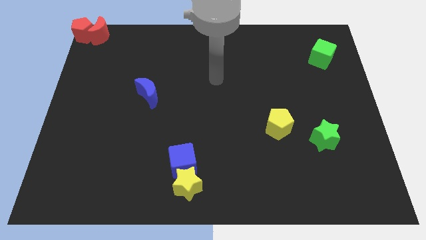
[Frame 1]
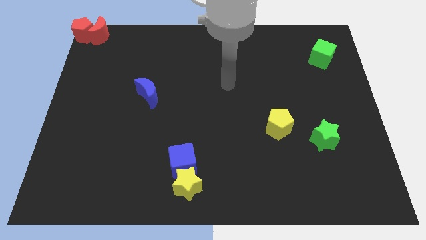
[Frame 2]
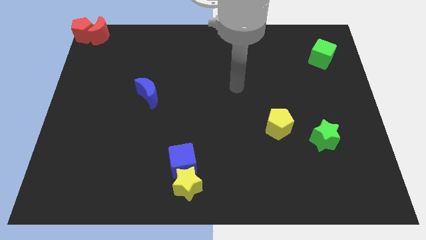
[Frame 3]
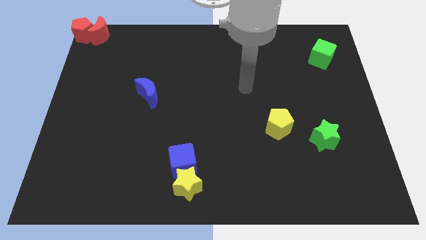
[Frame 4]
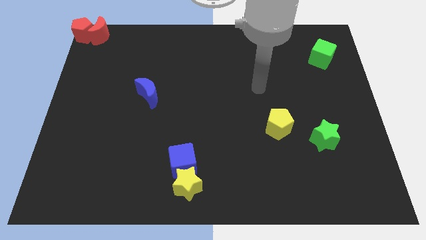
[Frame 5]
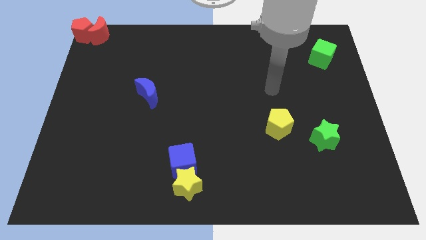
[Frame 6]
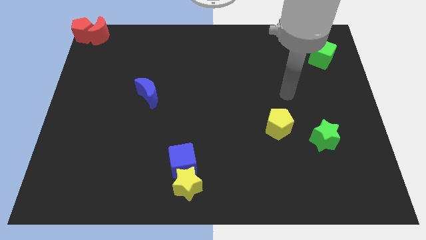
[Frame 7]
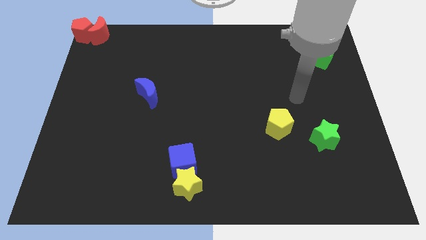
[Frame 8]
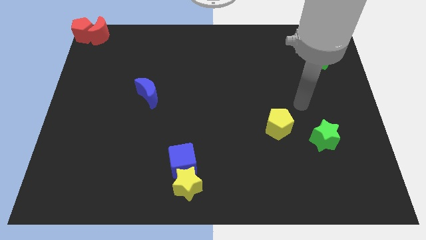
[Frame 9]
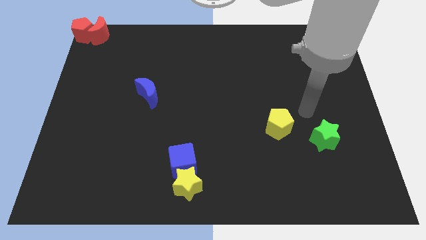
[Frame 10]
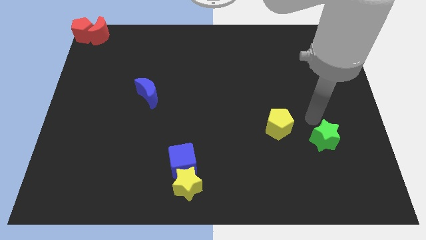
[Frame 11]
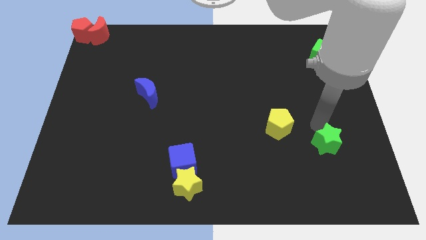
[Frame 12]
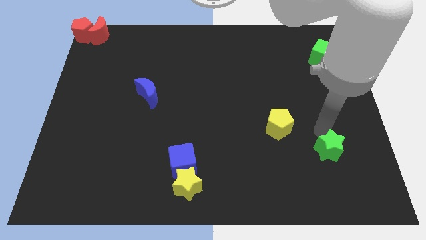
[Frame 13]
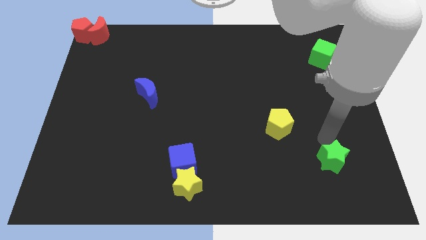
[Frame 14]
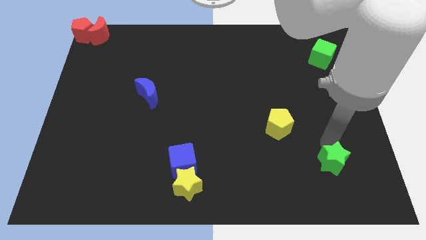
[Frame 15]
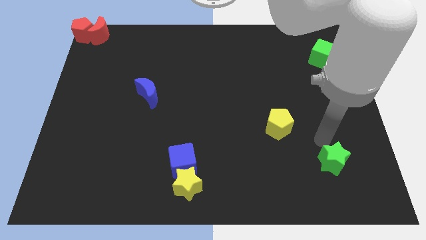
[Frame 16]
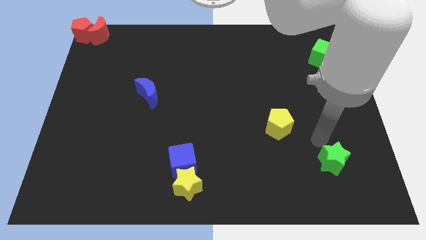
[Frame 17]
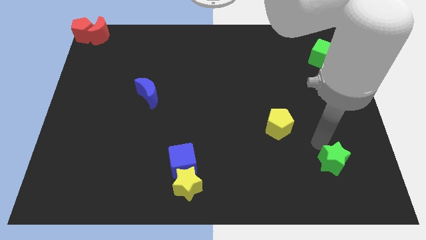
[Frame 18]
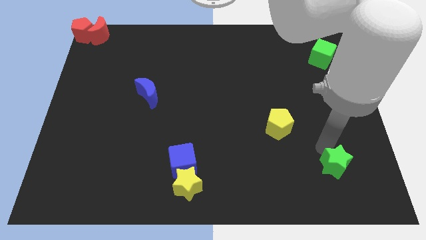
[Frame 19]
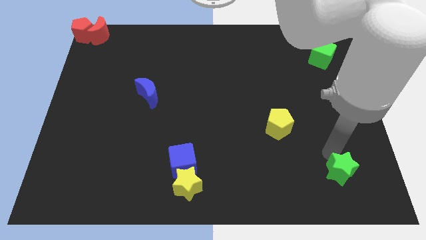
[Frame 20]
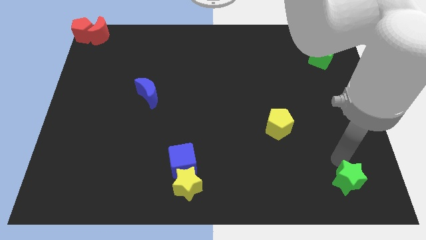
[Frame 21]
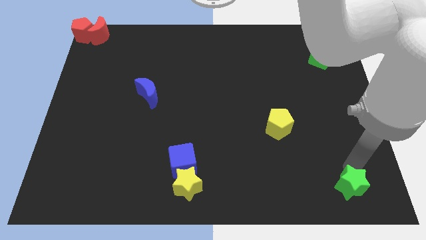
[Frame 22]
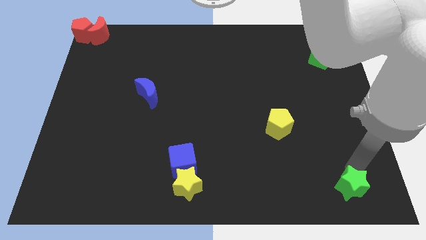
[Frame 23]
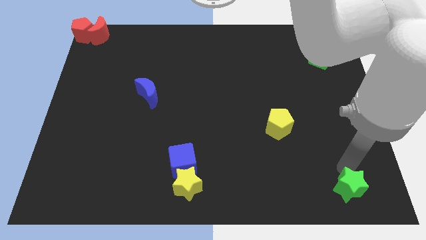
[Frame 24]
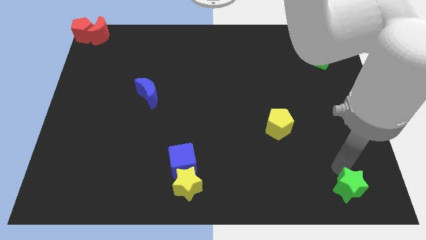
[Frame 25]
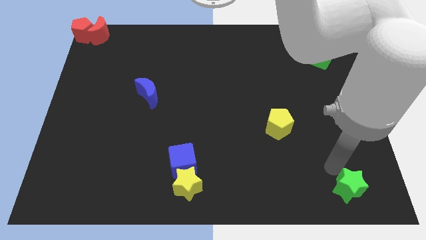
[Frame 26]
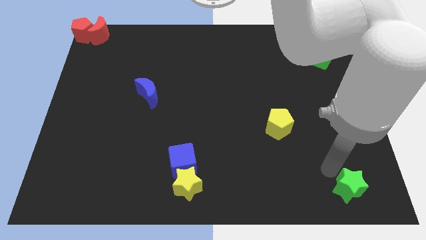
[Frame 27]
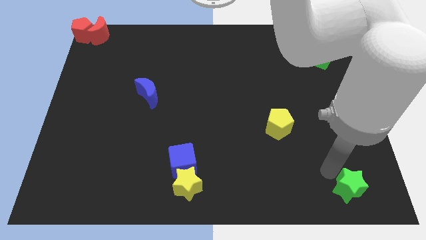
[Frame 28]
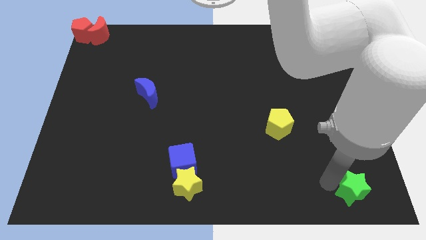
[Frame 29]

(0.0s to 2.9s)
push the green star downwards

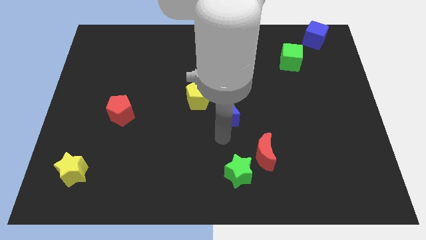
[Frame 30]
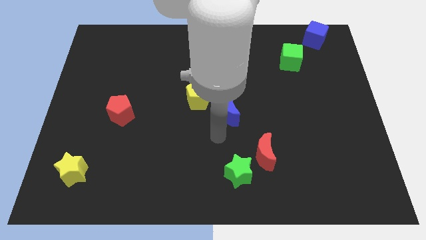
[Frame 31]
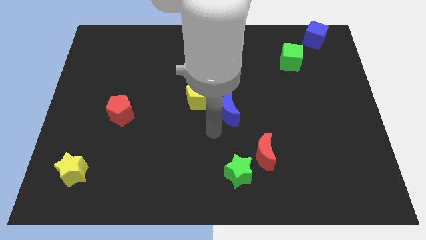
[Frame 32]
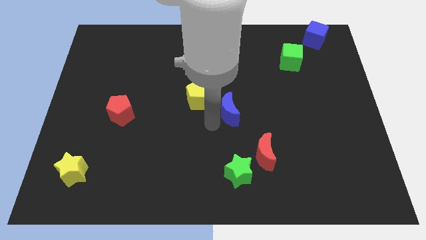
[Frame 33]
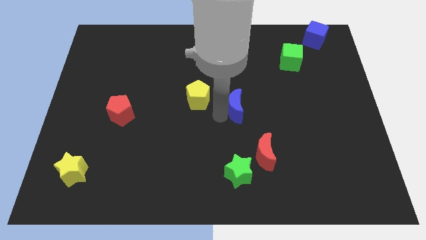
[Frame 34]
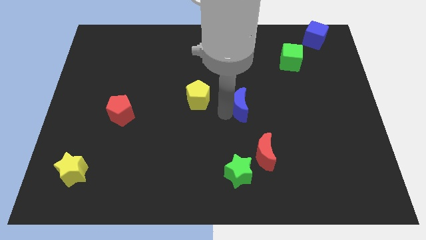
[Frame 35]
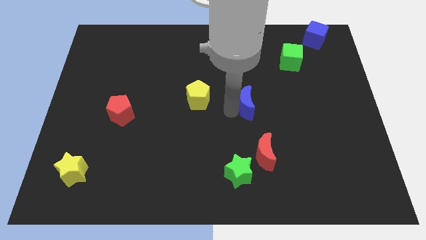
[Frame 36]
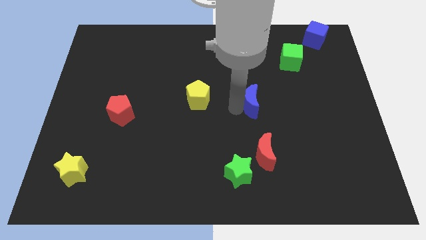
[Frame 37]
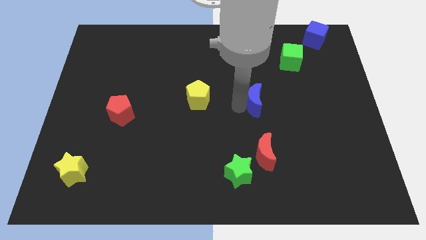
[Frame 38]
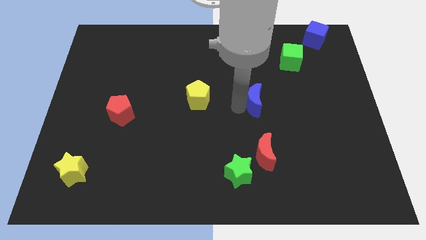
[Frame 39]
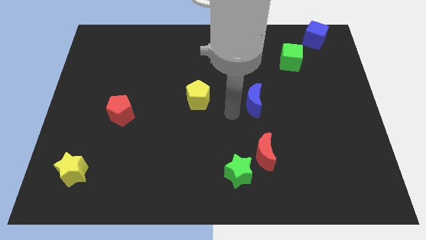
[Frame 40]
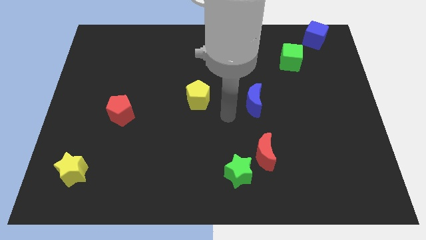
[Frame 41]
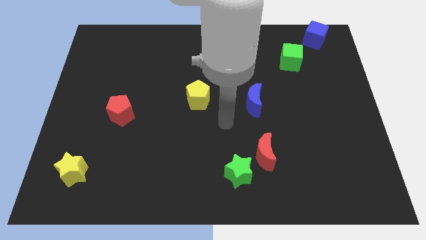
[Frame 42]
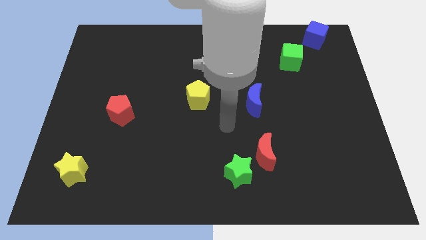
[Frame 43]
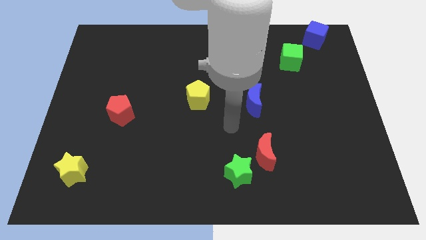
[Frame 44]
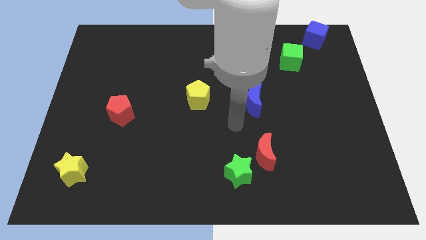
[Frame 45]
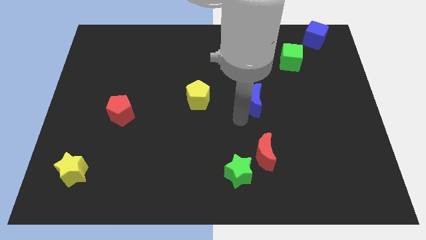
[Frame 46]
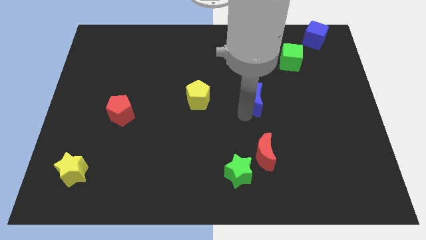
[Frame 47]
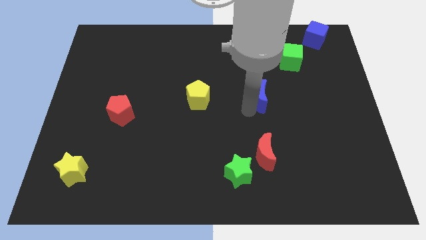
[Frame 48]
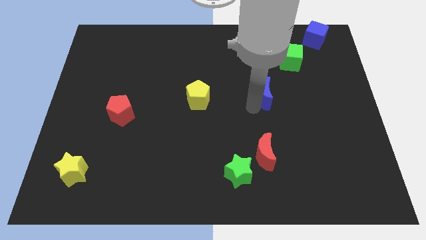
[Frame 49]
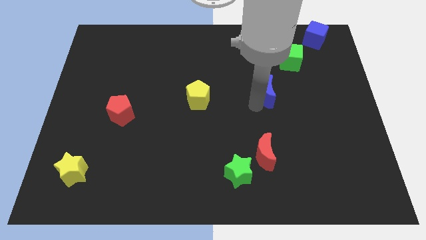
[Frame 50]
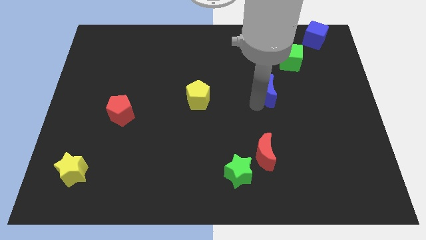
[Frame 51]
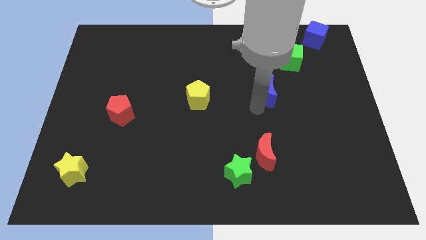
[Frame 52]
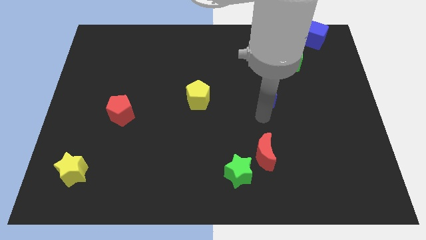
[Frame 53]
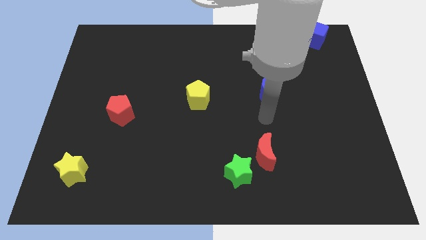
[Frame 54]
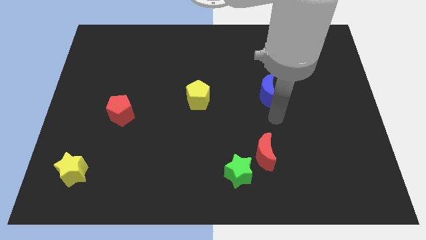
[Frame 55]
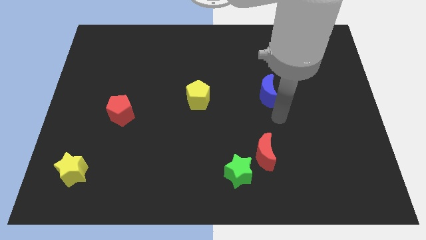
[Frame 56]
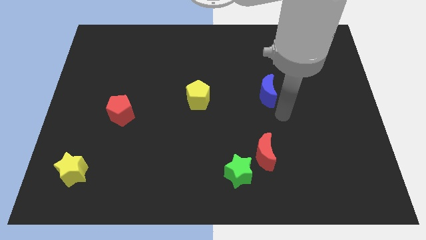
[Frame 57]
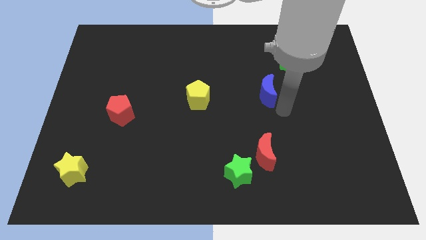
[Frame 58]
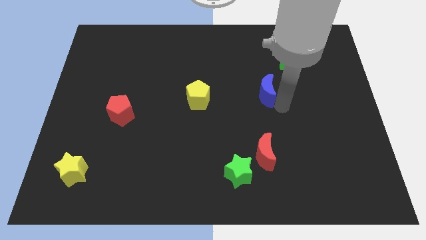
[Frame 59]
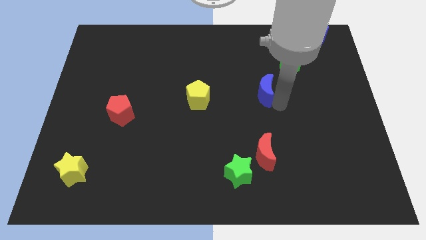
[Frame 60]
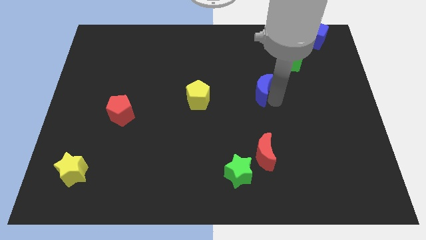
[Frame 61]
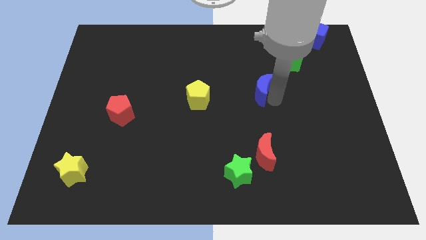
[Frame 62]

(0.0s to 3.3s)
move the blue moon diagonal below the green cube

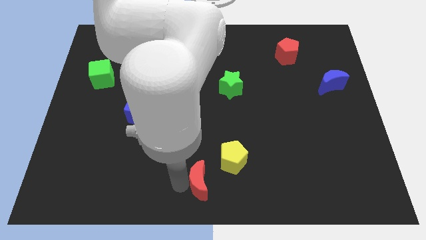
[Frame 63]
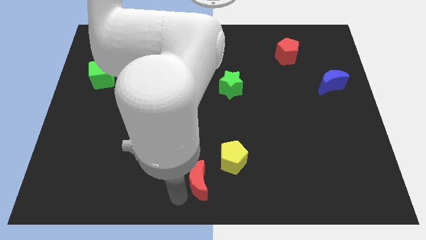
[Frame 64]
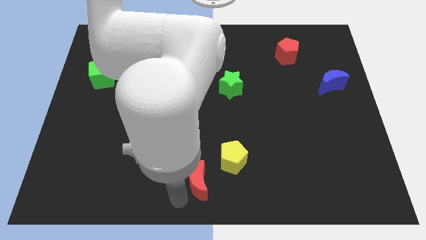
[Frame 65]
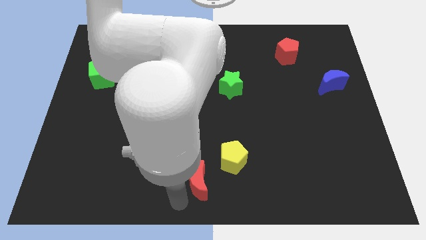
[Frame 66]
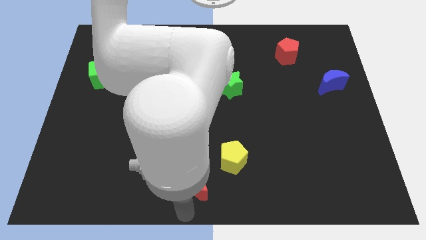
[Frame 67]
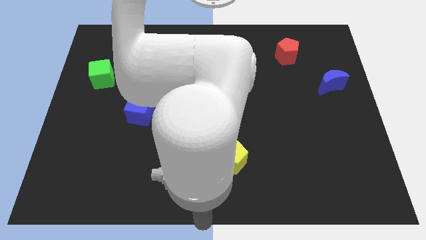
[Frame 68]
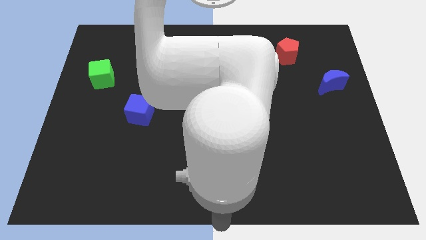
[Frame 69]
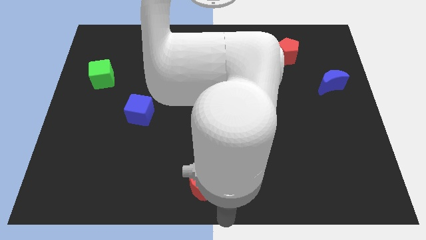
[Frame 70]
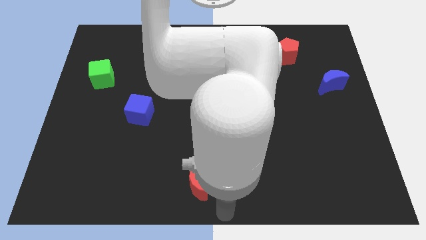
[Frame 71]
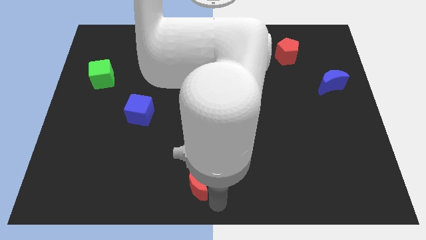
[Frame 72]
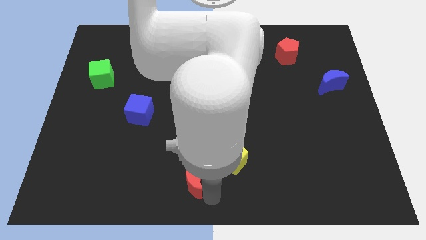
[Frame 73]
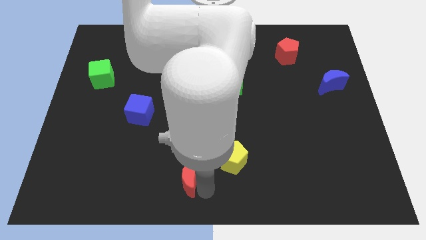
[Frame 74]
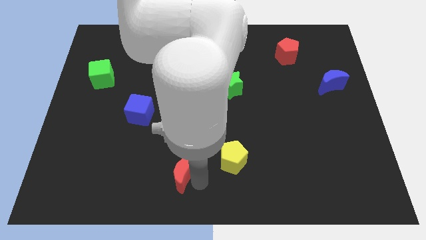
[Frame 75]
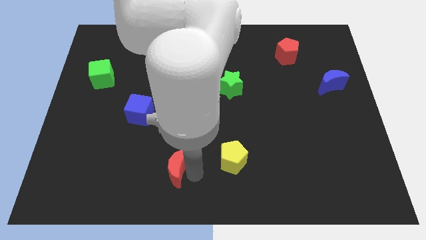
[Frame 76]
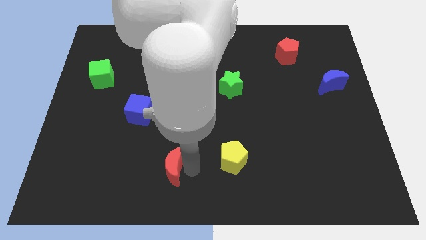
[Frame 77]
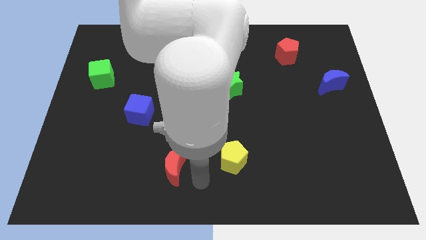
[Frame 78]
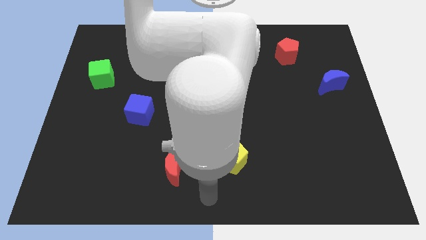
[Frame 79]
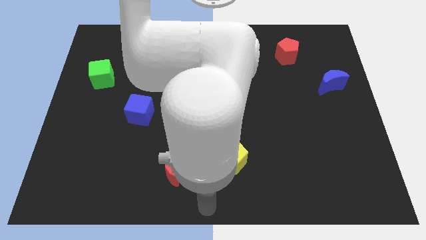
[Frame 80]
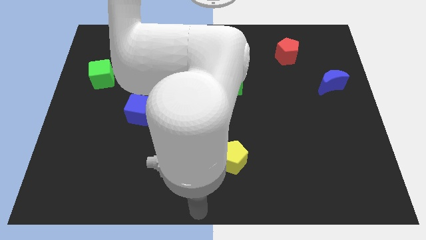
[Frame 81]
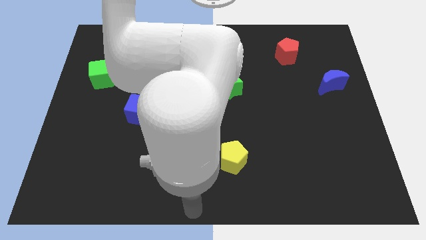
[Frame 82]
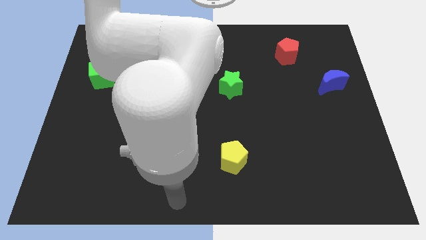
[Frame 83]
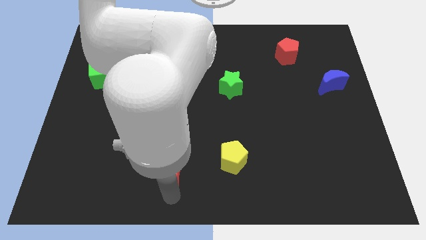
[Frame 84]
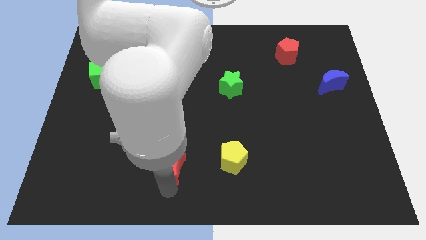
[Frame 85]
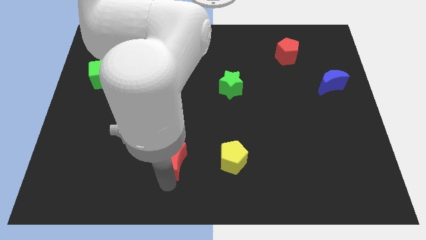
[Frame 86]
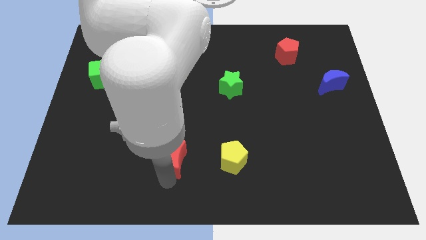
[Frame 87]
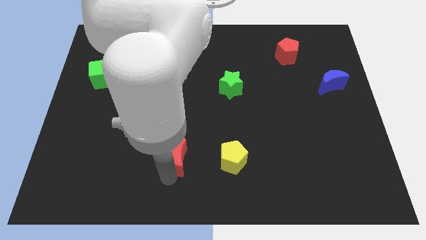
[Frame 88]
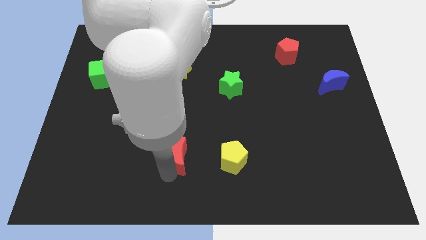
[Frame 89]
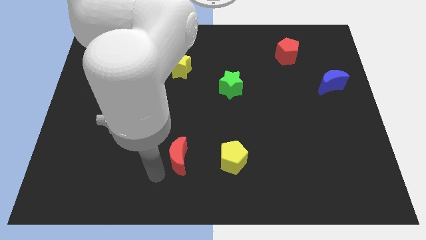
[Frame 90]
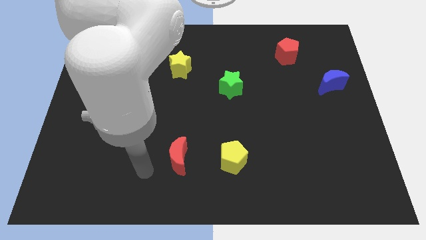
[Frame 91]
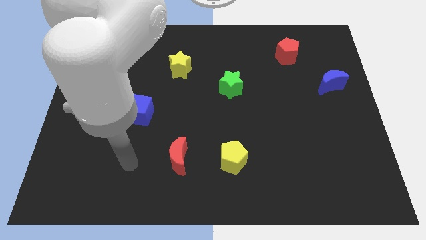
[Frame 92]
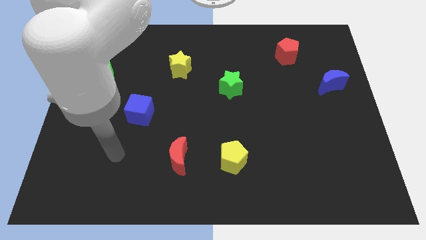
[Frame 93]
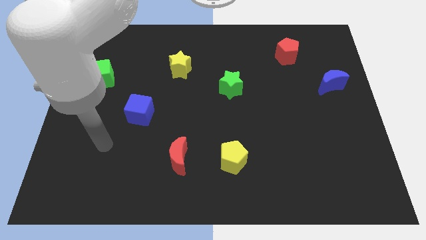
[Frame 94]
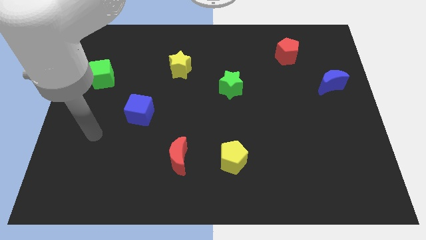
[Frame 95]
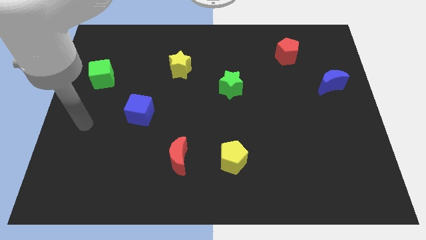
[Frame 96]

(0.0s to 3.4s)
place the red moon left to the yellow pentagon
